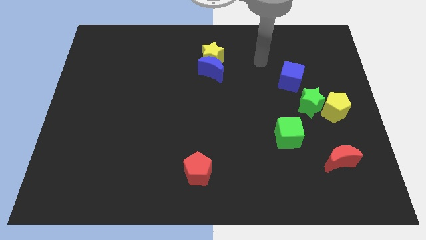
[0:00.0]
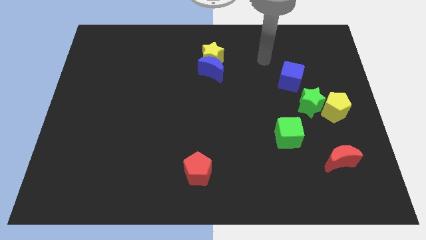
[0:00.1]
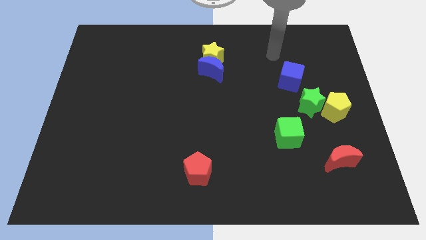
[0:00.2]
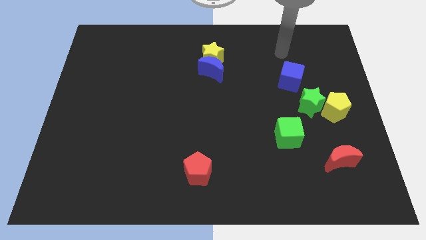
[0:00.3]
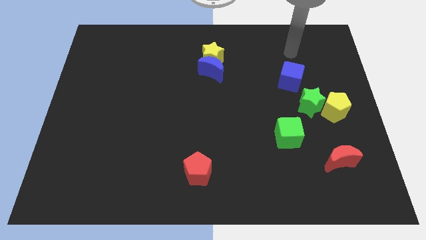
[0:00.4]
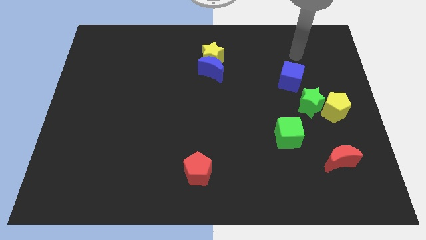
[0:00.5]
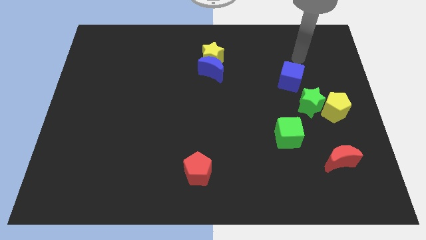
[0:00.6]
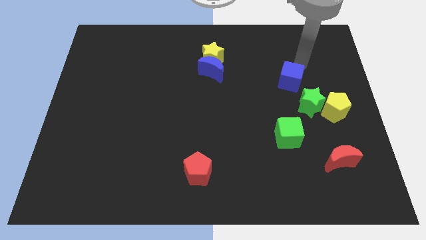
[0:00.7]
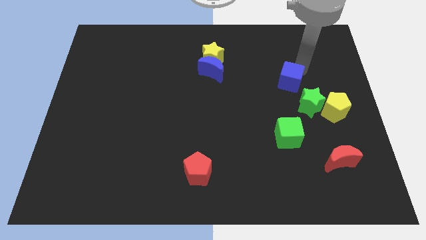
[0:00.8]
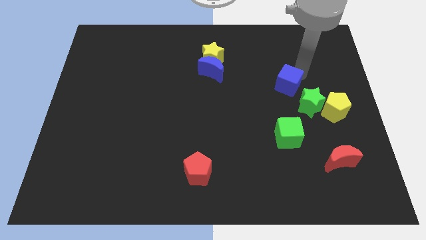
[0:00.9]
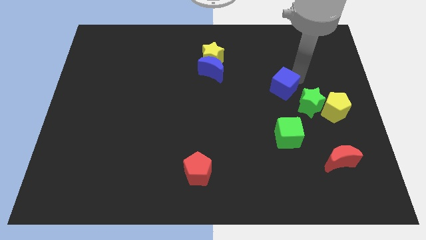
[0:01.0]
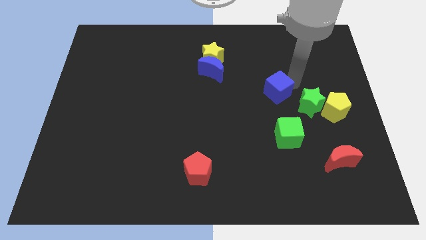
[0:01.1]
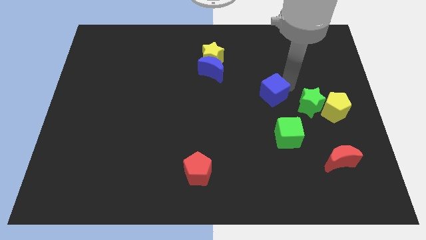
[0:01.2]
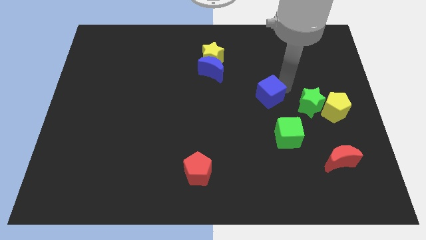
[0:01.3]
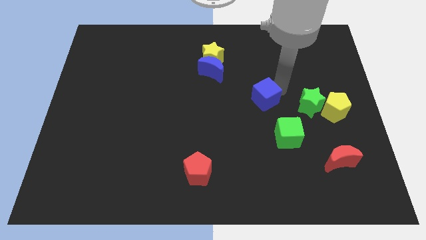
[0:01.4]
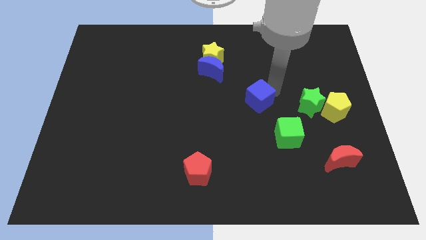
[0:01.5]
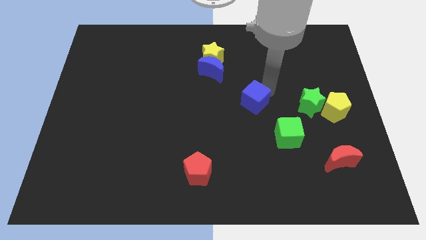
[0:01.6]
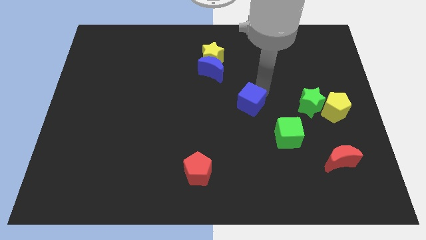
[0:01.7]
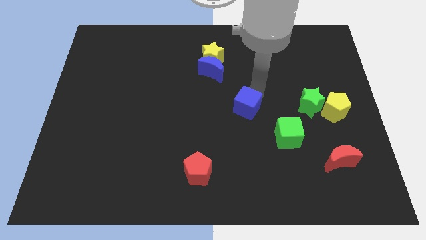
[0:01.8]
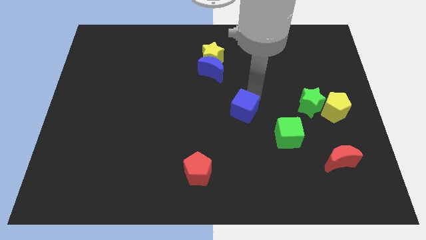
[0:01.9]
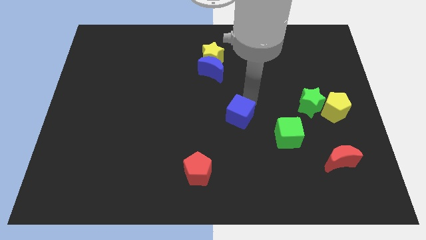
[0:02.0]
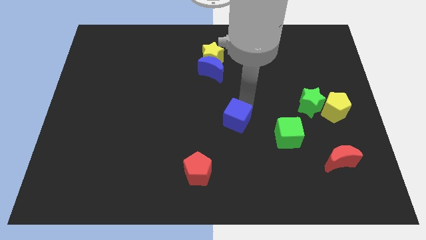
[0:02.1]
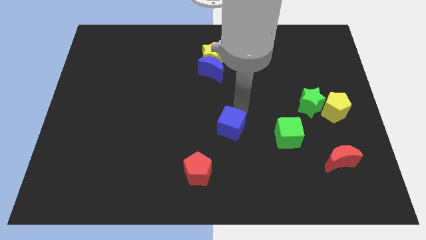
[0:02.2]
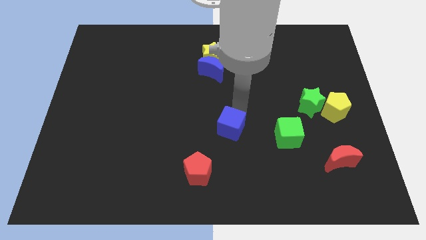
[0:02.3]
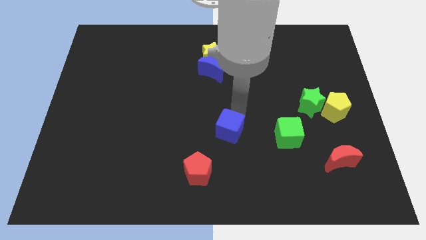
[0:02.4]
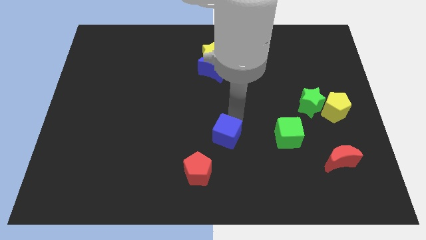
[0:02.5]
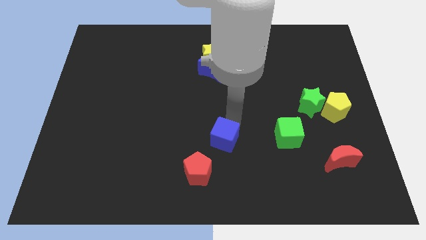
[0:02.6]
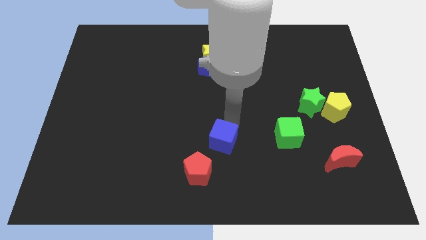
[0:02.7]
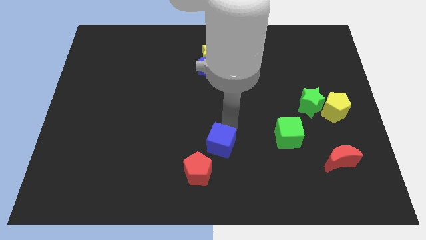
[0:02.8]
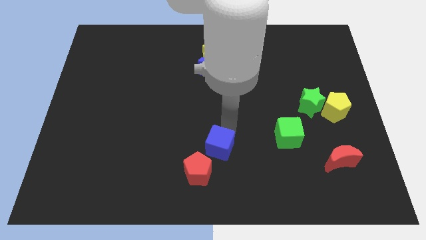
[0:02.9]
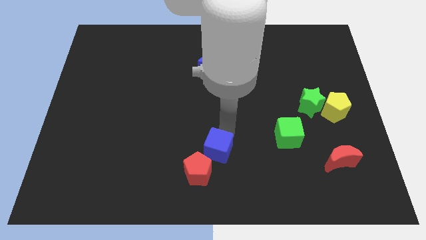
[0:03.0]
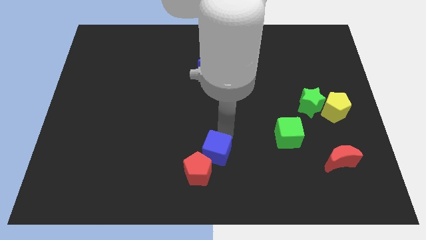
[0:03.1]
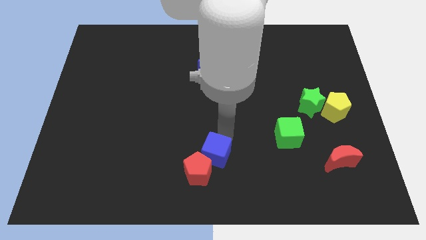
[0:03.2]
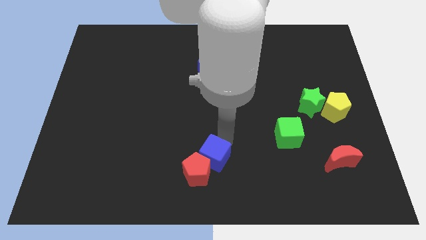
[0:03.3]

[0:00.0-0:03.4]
put the blue cube close to the red pentagon

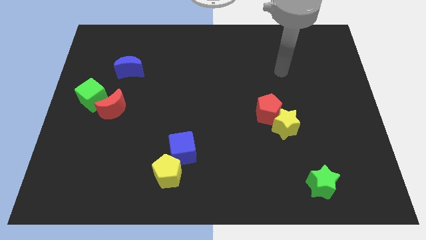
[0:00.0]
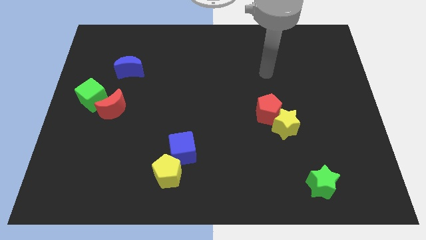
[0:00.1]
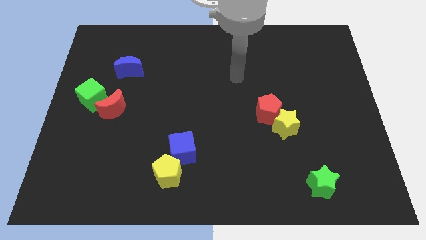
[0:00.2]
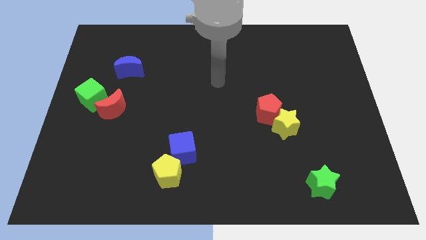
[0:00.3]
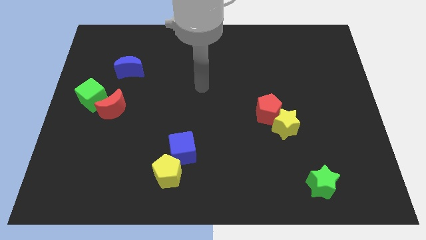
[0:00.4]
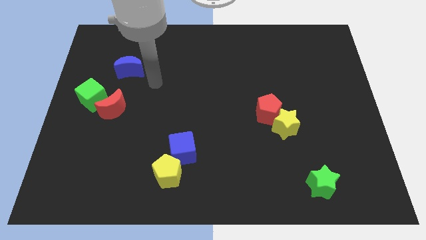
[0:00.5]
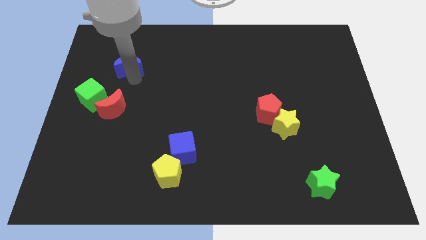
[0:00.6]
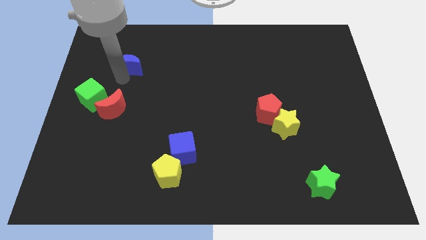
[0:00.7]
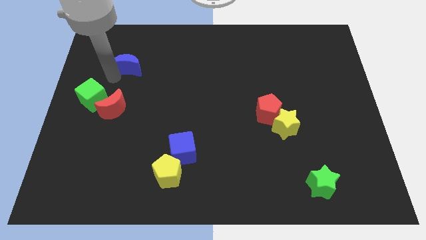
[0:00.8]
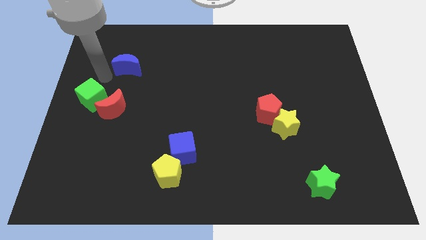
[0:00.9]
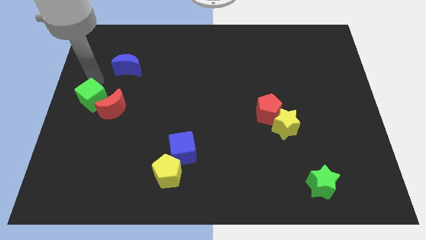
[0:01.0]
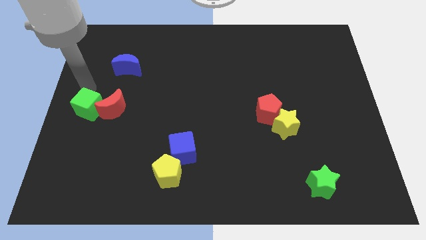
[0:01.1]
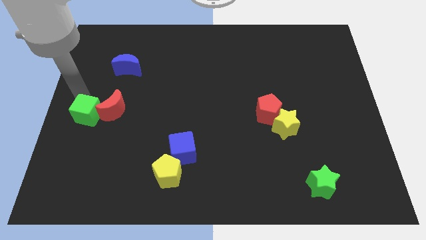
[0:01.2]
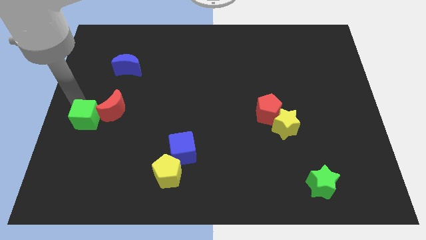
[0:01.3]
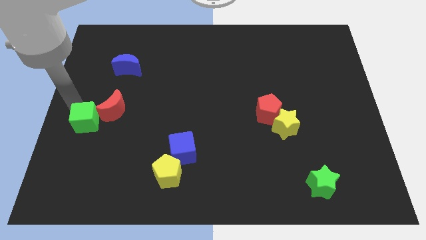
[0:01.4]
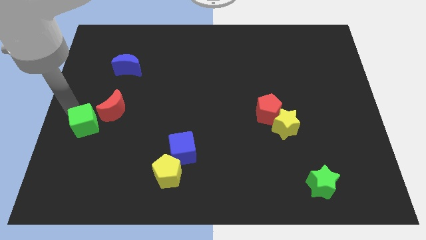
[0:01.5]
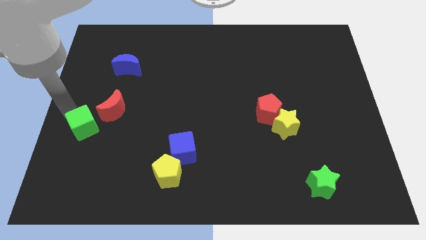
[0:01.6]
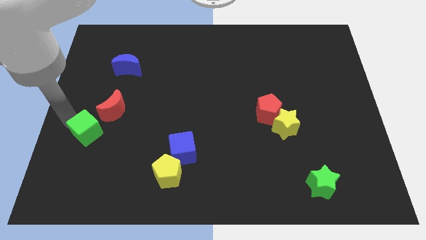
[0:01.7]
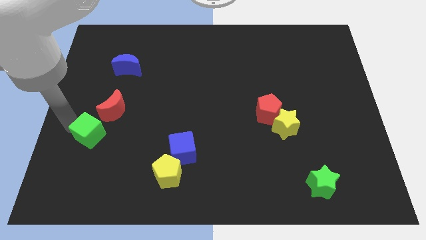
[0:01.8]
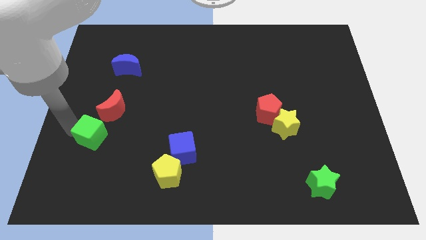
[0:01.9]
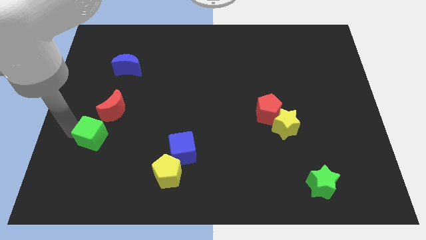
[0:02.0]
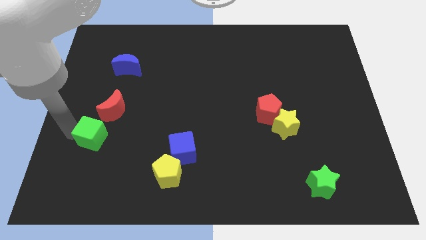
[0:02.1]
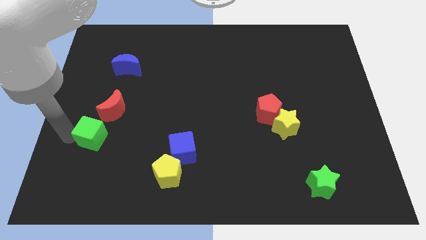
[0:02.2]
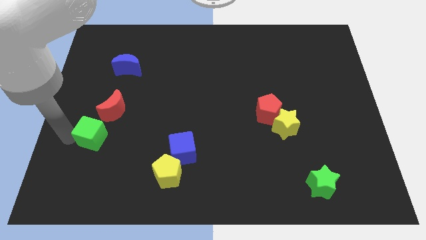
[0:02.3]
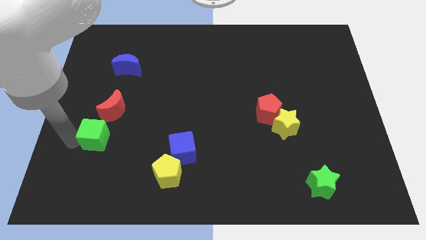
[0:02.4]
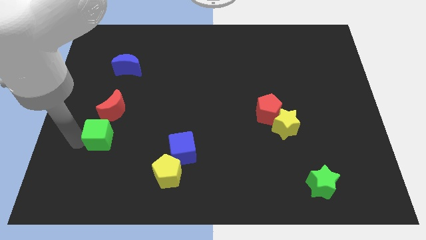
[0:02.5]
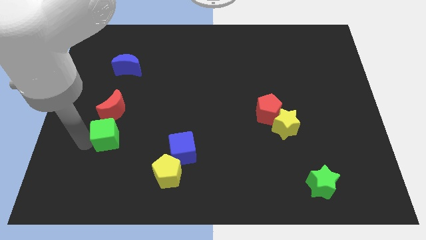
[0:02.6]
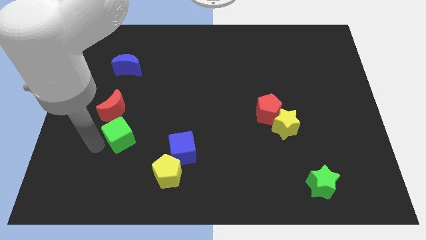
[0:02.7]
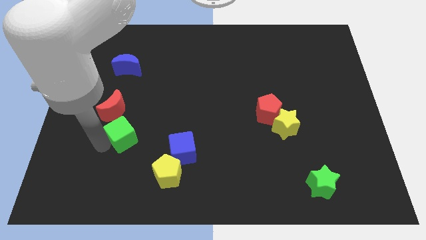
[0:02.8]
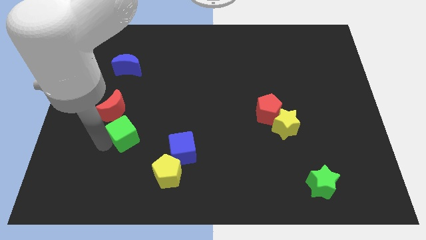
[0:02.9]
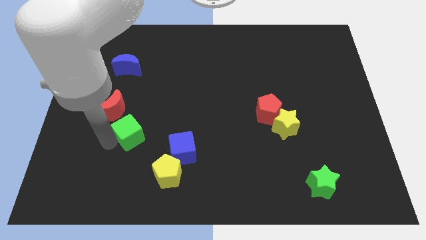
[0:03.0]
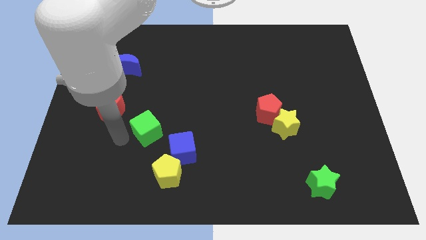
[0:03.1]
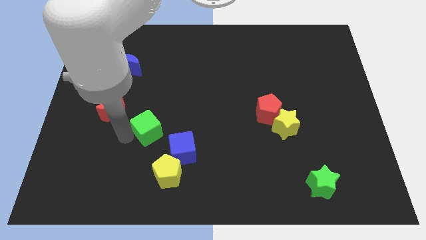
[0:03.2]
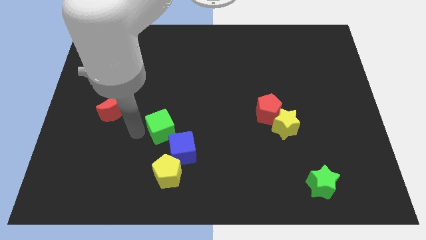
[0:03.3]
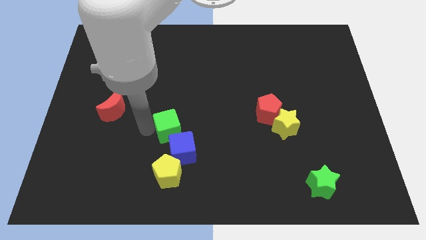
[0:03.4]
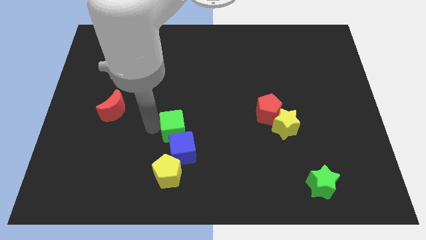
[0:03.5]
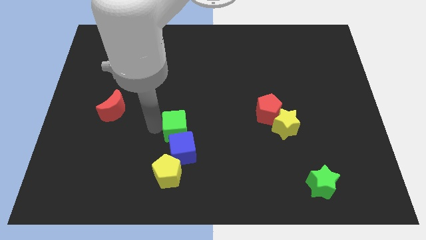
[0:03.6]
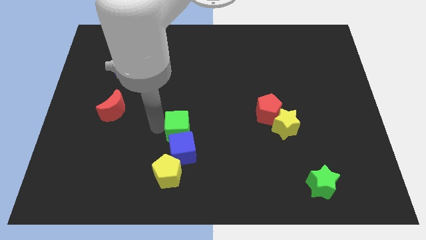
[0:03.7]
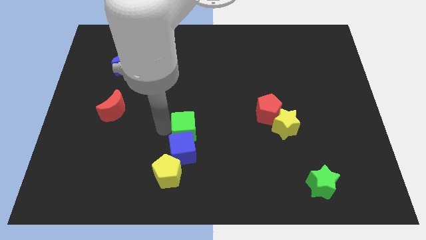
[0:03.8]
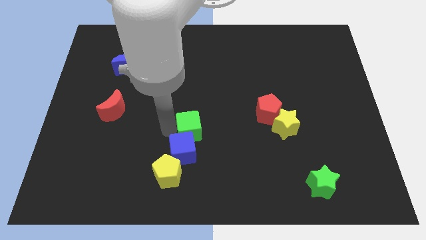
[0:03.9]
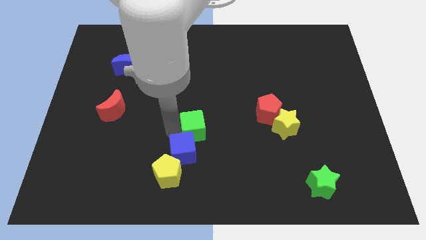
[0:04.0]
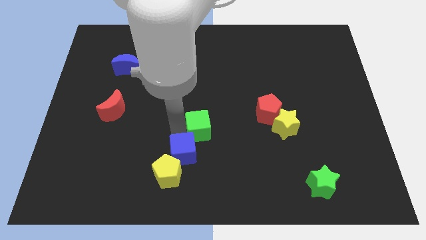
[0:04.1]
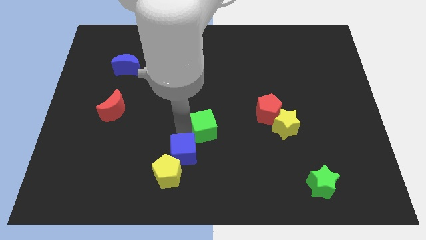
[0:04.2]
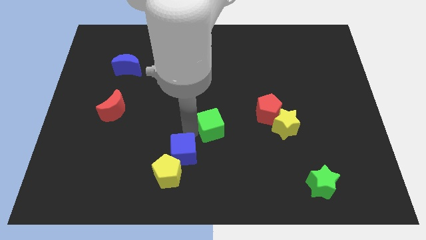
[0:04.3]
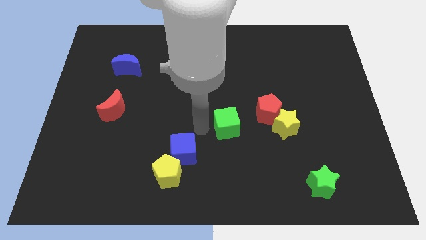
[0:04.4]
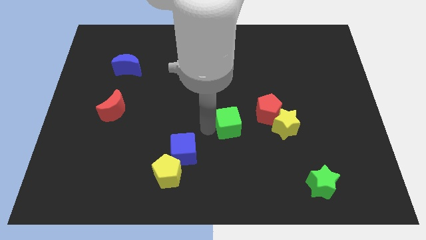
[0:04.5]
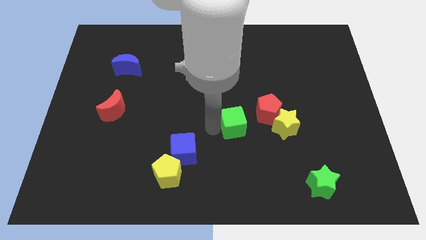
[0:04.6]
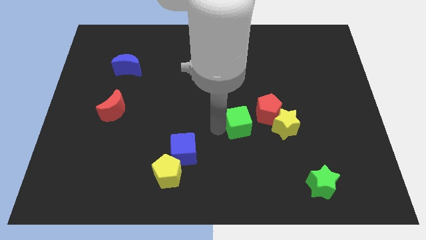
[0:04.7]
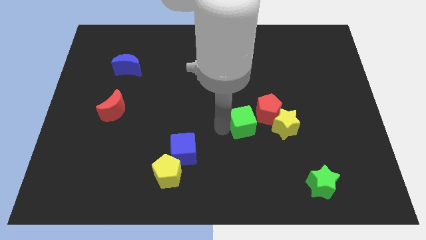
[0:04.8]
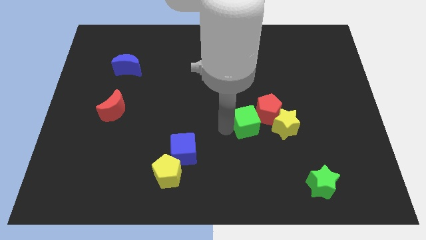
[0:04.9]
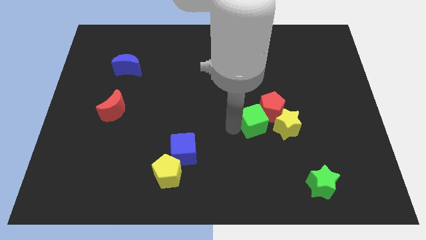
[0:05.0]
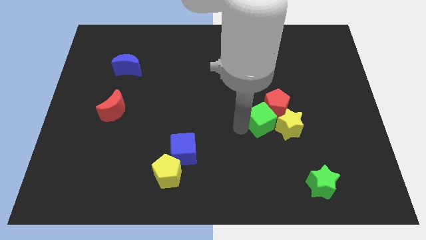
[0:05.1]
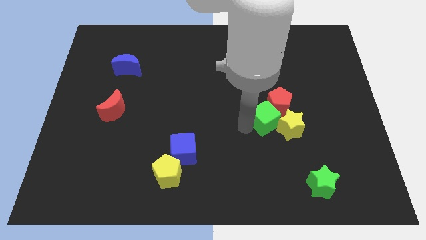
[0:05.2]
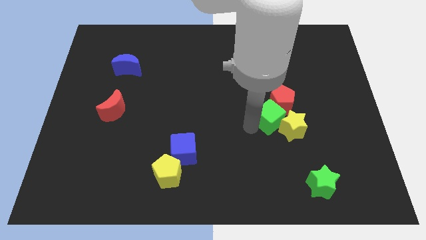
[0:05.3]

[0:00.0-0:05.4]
slide the green cube to the yellow star
